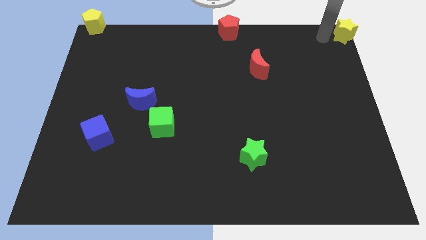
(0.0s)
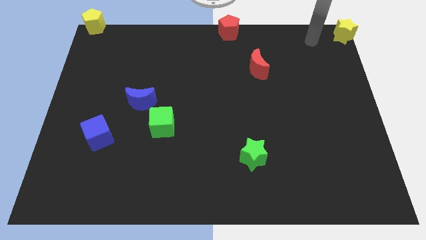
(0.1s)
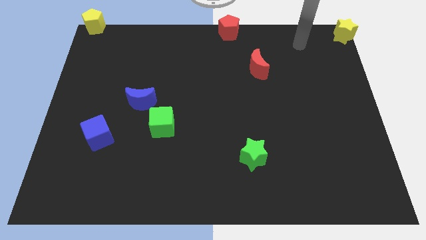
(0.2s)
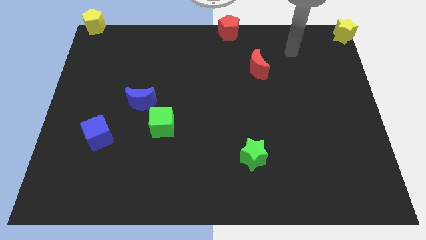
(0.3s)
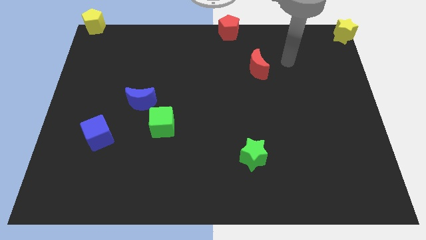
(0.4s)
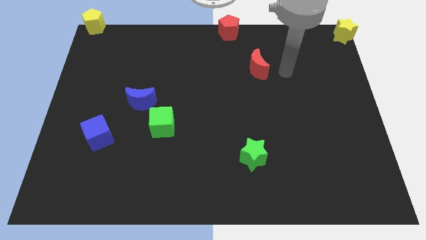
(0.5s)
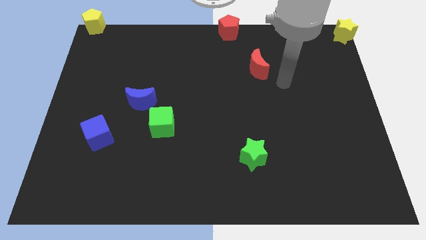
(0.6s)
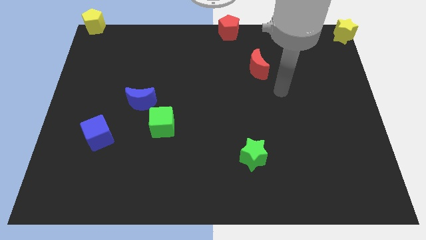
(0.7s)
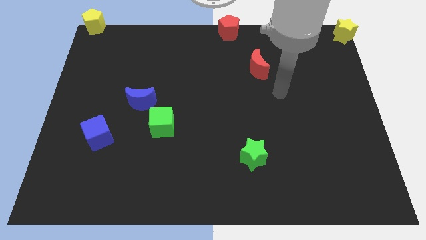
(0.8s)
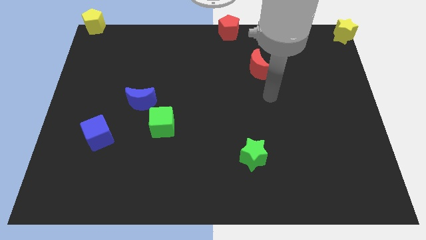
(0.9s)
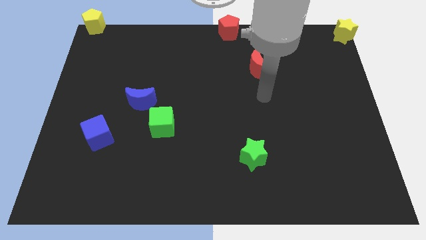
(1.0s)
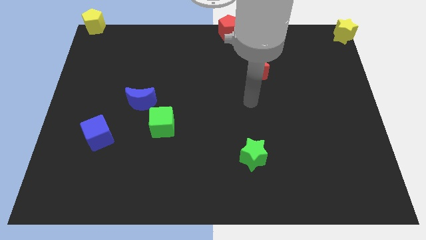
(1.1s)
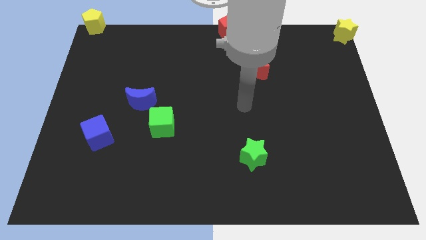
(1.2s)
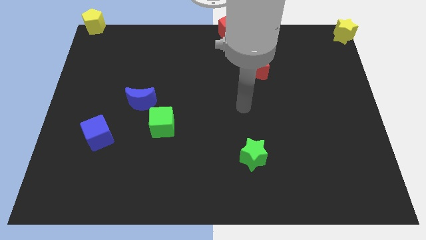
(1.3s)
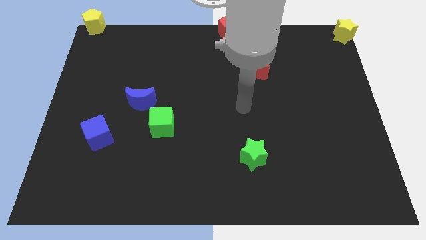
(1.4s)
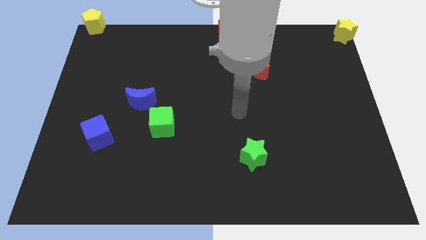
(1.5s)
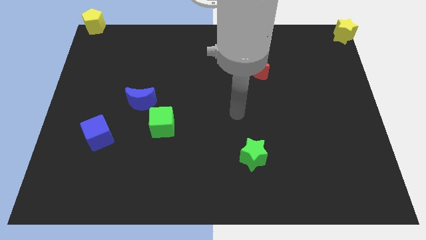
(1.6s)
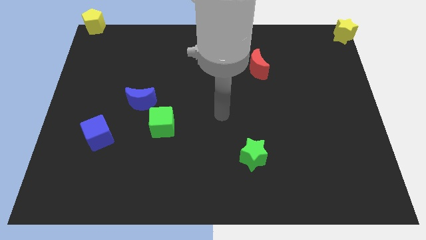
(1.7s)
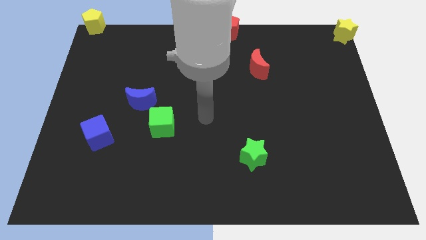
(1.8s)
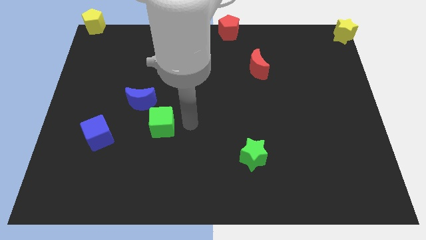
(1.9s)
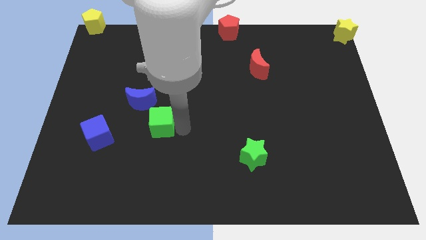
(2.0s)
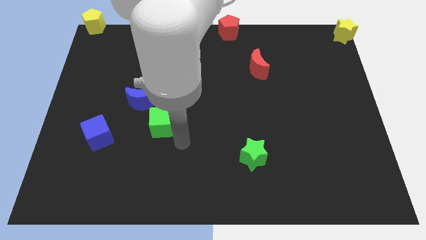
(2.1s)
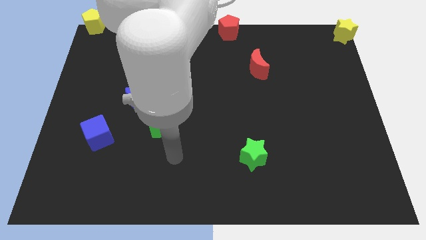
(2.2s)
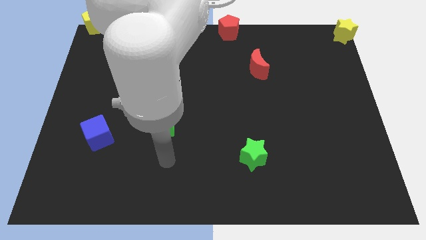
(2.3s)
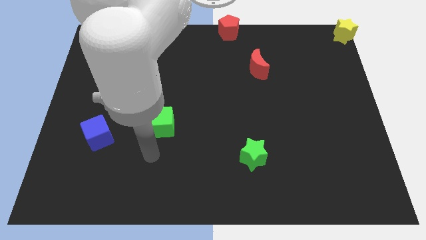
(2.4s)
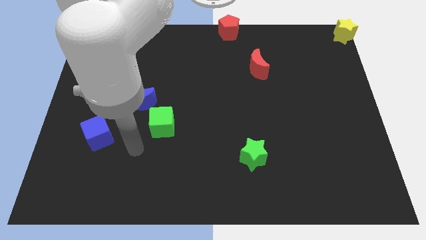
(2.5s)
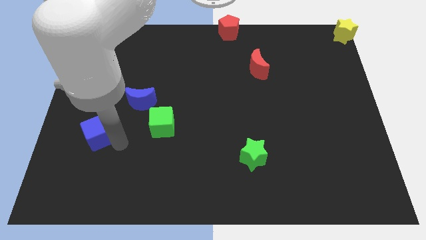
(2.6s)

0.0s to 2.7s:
place the arm near the blue cube

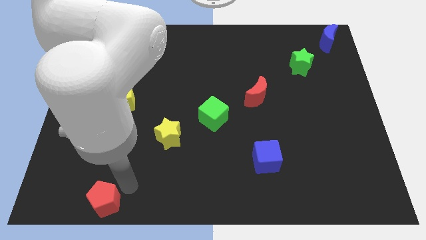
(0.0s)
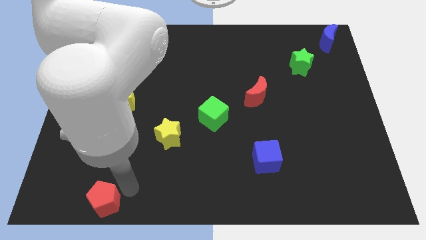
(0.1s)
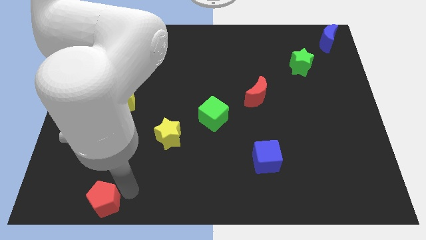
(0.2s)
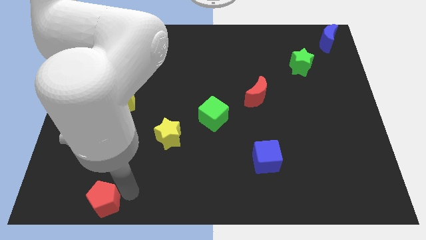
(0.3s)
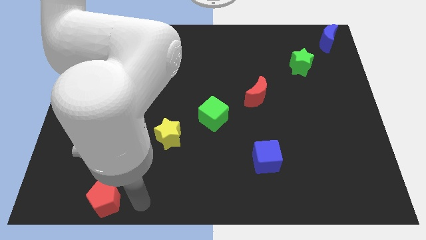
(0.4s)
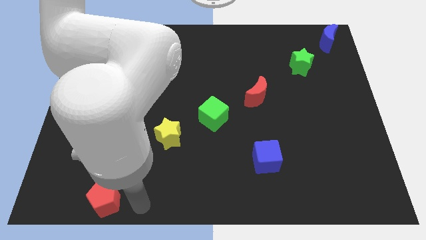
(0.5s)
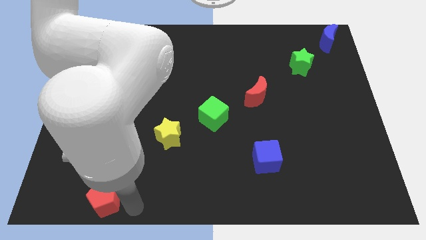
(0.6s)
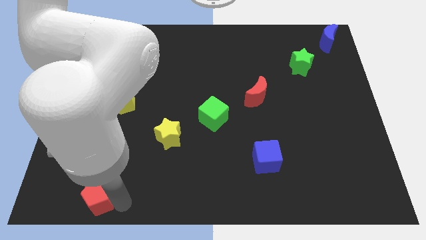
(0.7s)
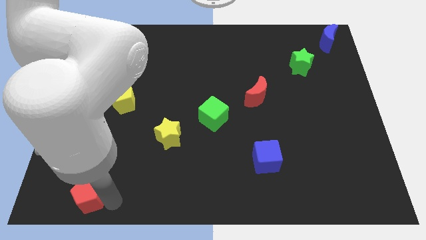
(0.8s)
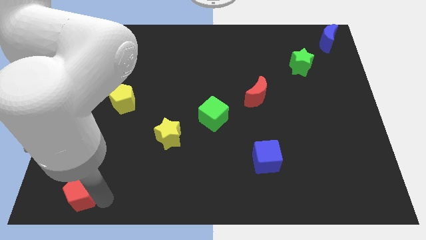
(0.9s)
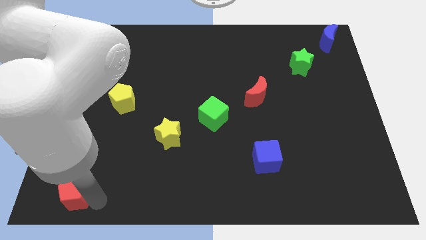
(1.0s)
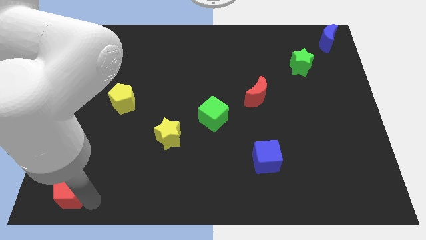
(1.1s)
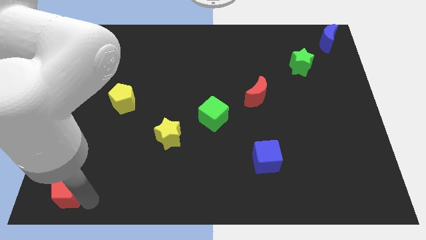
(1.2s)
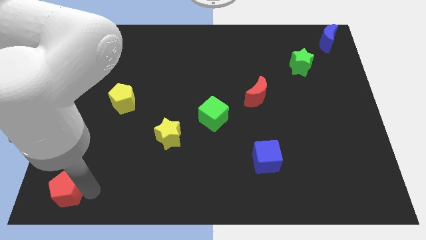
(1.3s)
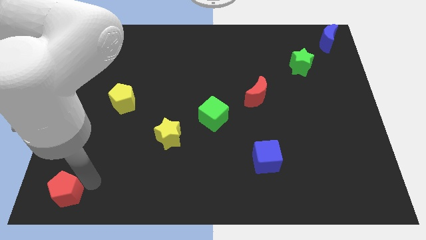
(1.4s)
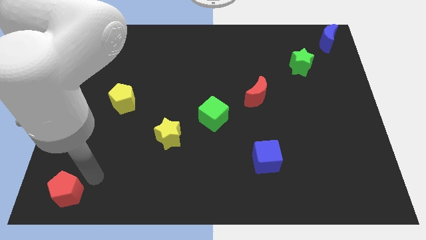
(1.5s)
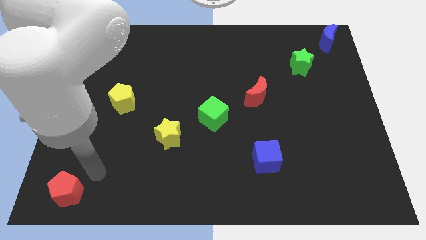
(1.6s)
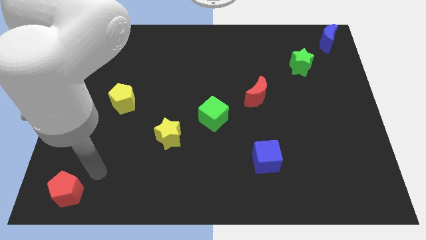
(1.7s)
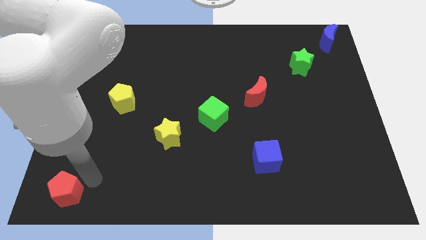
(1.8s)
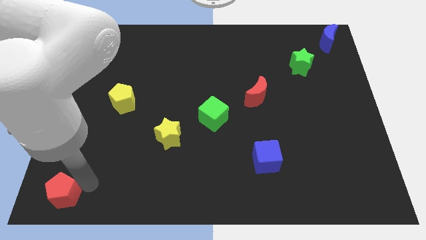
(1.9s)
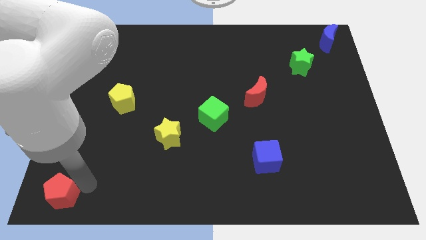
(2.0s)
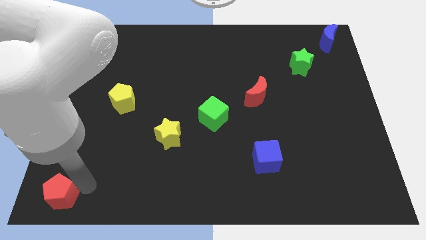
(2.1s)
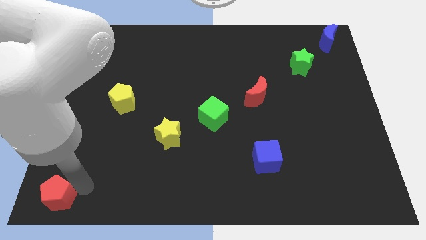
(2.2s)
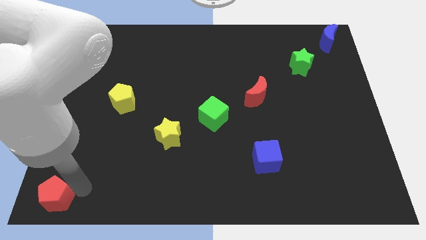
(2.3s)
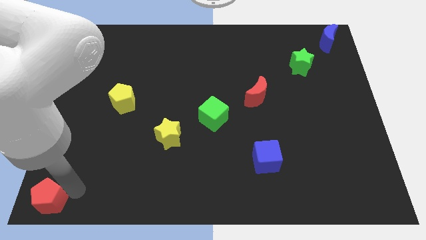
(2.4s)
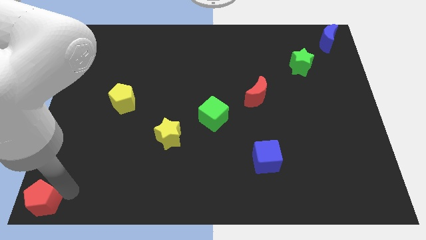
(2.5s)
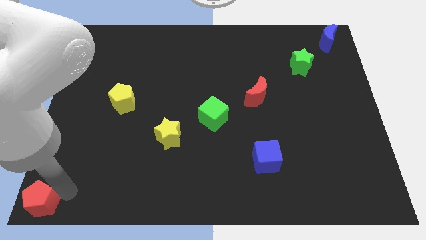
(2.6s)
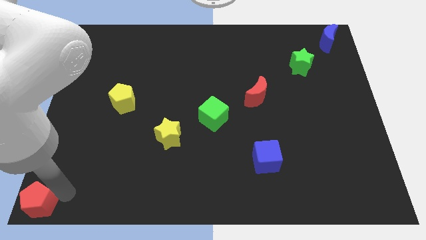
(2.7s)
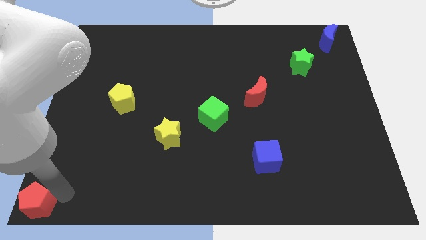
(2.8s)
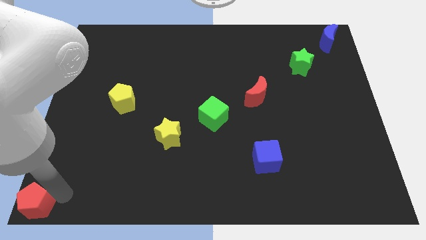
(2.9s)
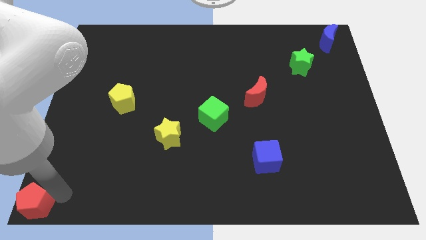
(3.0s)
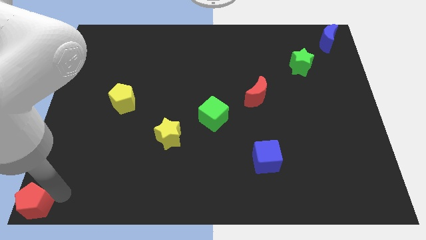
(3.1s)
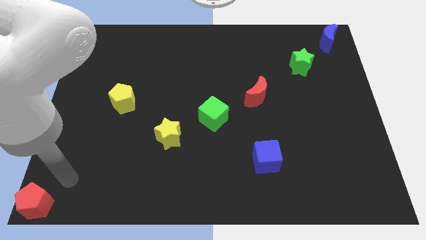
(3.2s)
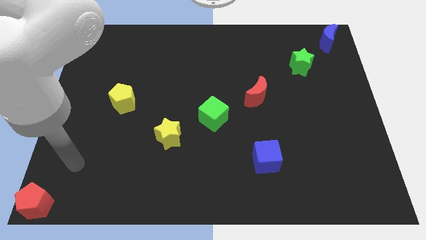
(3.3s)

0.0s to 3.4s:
put the red pentagon at the bottom left corner

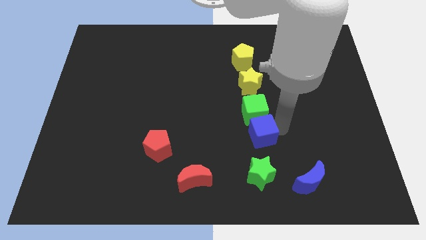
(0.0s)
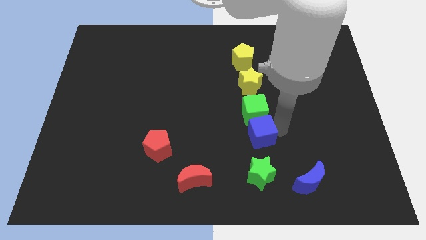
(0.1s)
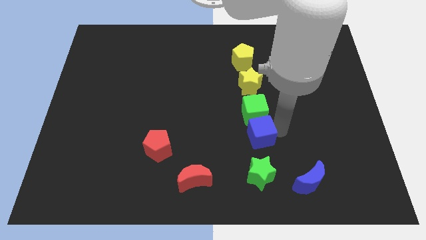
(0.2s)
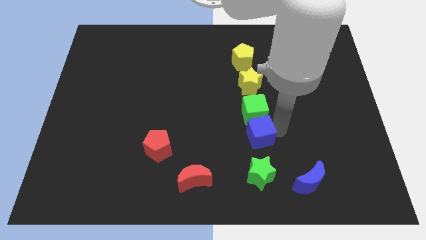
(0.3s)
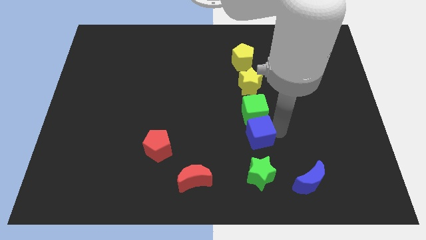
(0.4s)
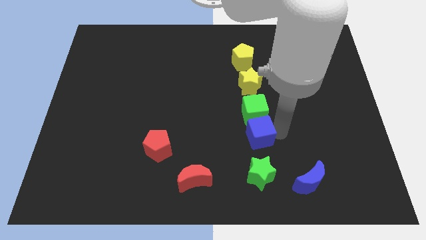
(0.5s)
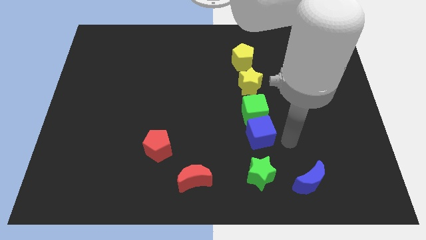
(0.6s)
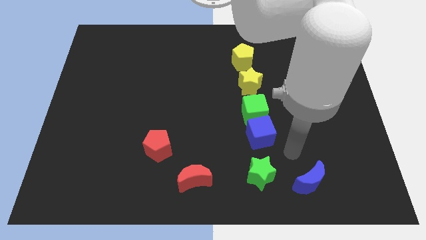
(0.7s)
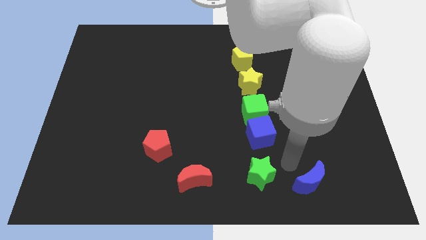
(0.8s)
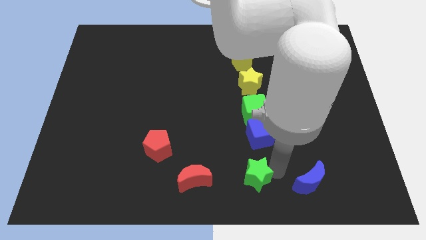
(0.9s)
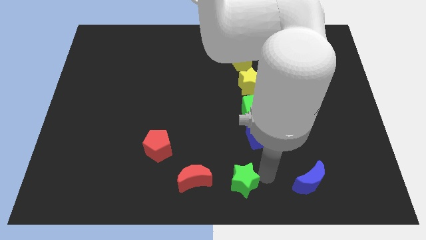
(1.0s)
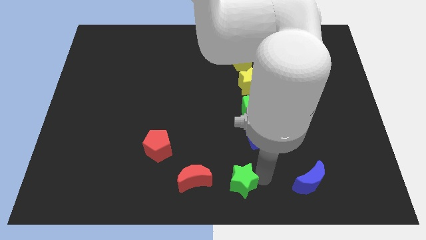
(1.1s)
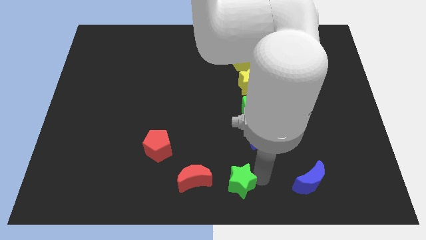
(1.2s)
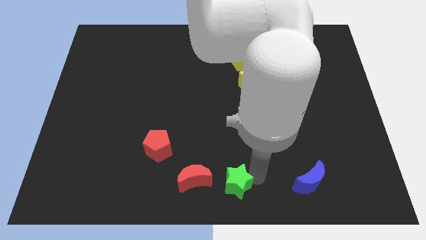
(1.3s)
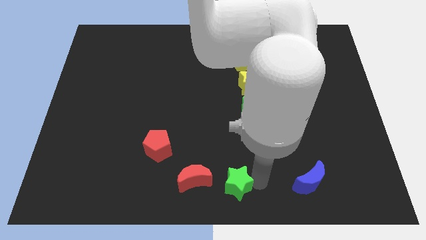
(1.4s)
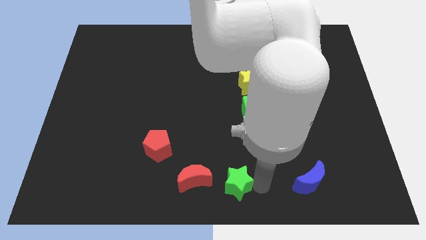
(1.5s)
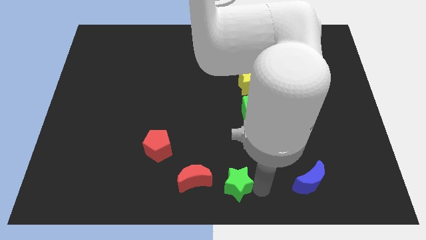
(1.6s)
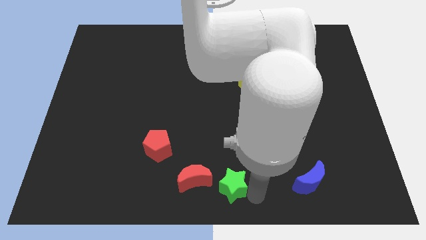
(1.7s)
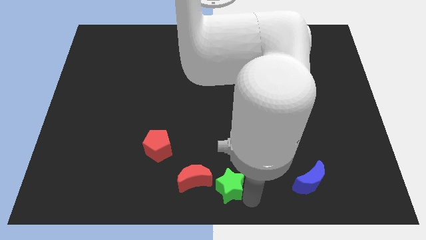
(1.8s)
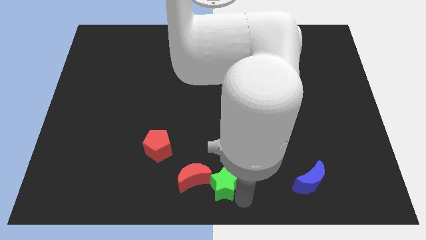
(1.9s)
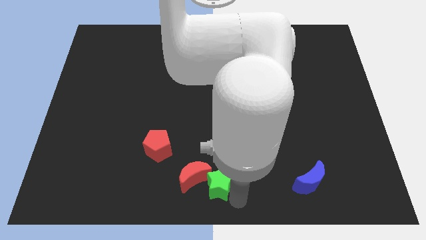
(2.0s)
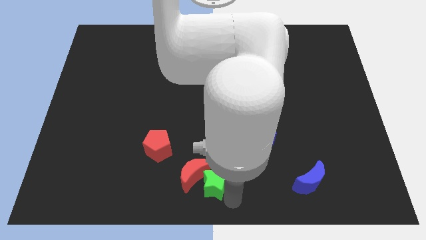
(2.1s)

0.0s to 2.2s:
move green star into red moon

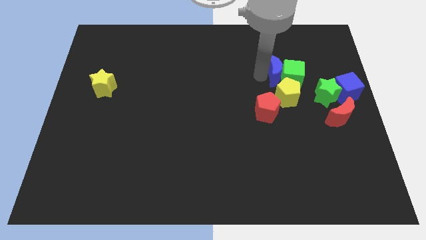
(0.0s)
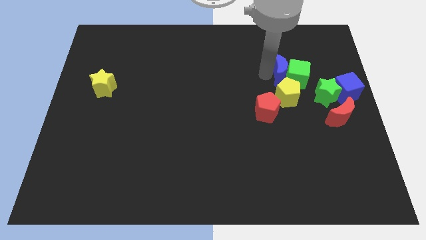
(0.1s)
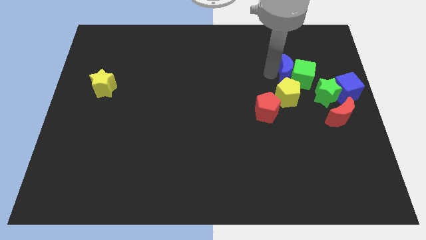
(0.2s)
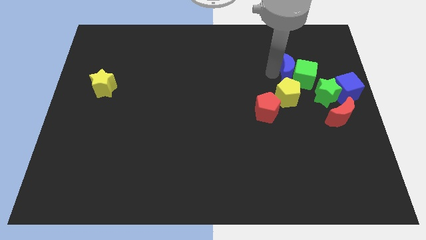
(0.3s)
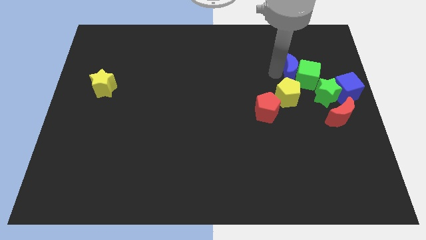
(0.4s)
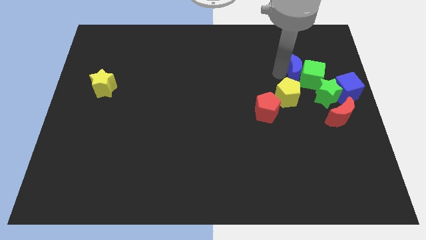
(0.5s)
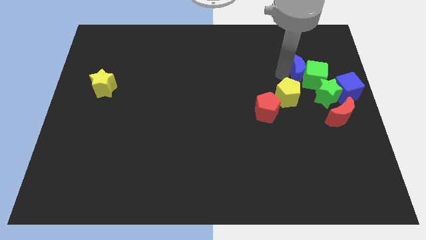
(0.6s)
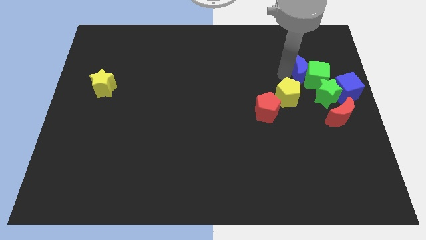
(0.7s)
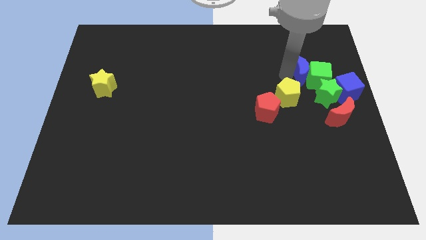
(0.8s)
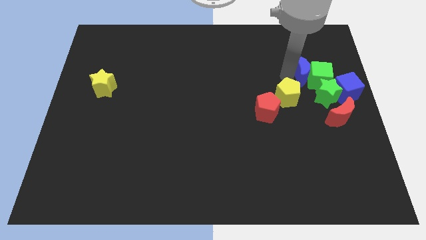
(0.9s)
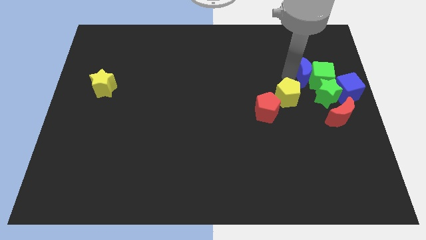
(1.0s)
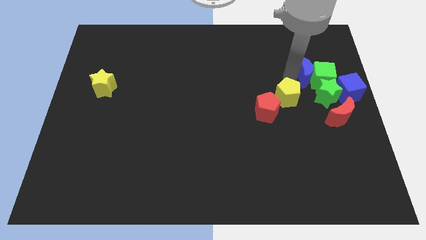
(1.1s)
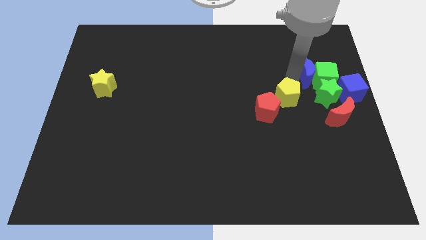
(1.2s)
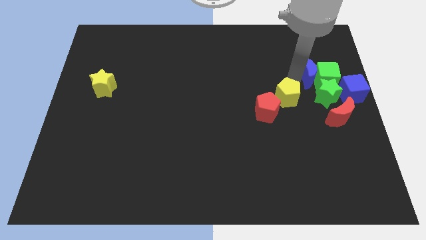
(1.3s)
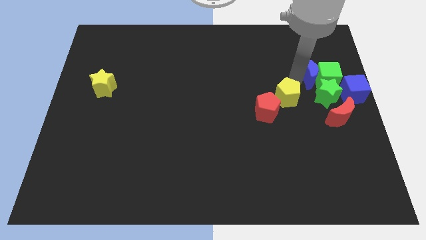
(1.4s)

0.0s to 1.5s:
move the green cube with the help of the blue crescent towards the right center of the board
